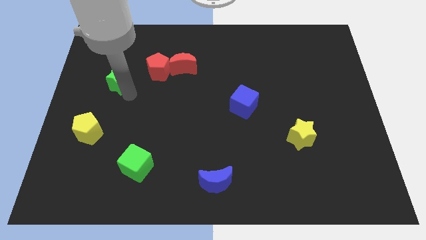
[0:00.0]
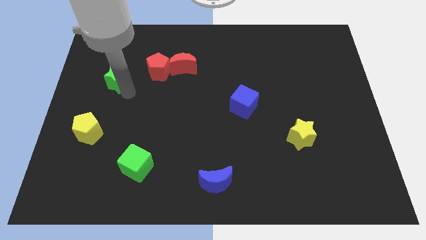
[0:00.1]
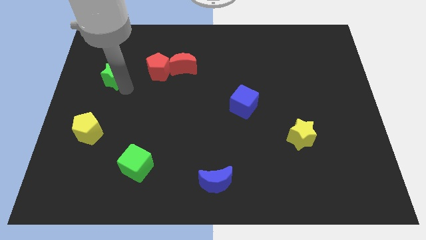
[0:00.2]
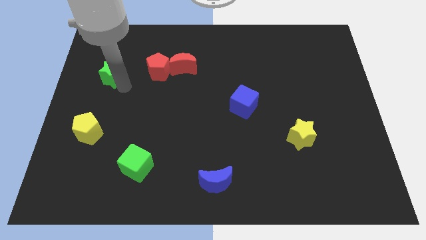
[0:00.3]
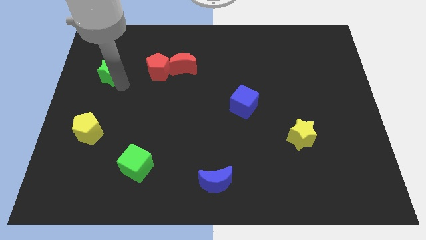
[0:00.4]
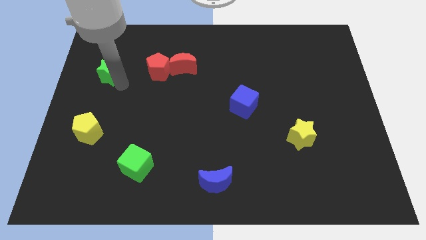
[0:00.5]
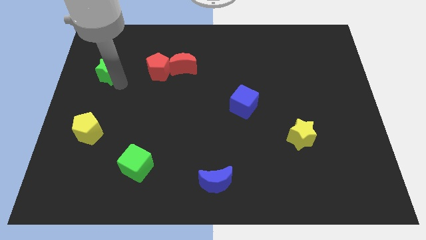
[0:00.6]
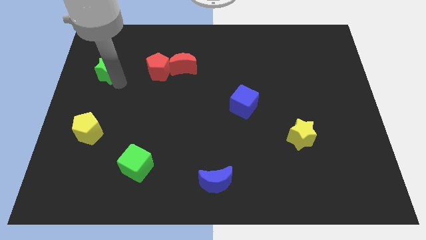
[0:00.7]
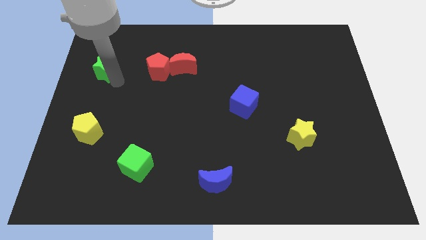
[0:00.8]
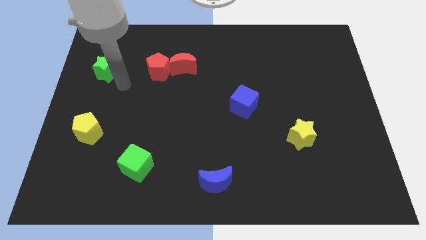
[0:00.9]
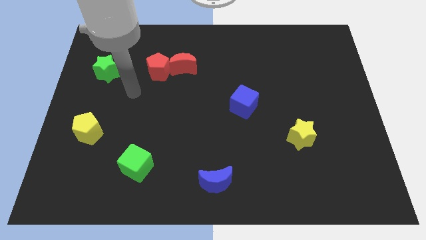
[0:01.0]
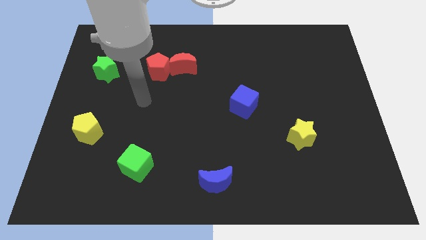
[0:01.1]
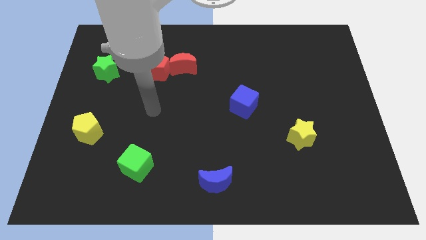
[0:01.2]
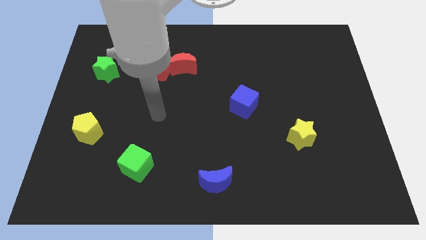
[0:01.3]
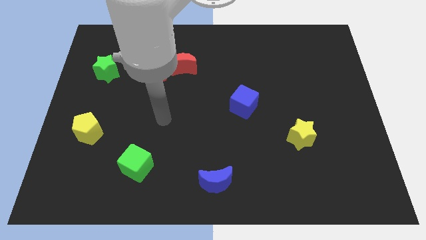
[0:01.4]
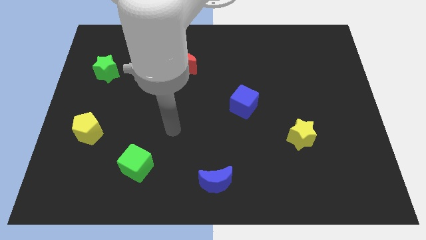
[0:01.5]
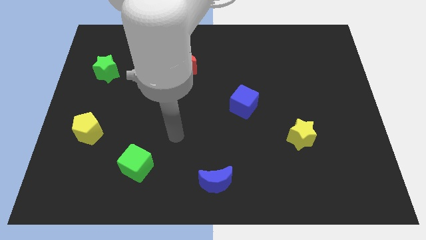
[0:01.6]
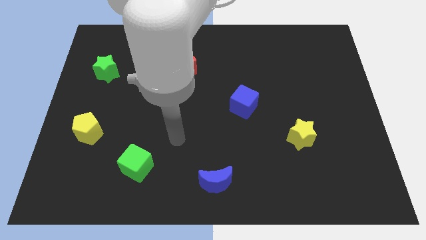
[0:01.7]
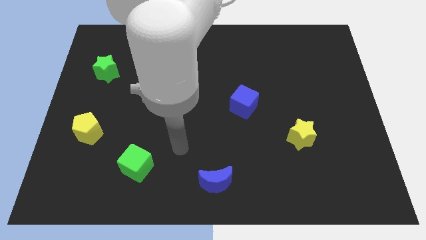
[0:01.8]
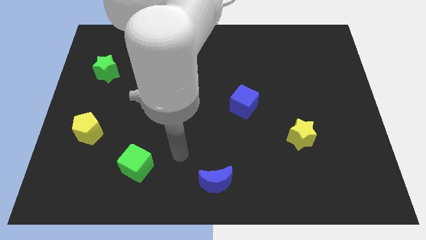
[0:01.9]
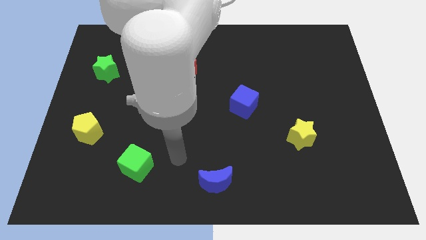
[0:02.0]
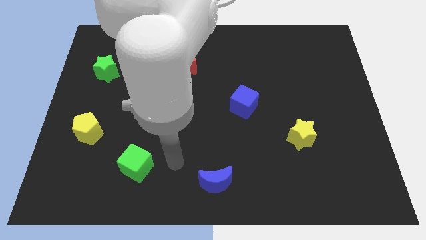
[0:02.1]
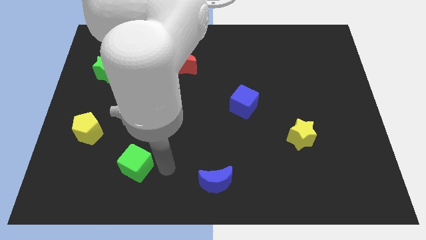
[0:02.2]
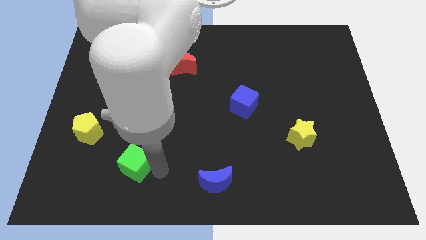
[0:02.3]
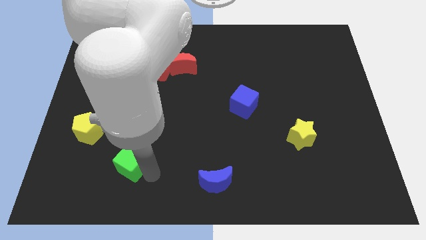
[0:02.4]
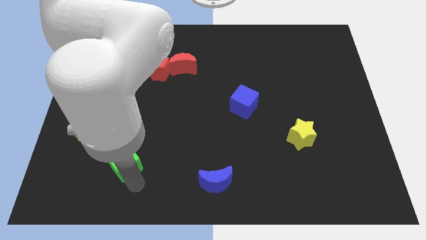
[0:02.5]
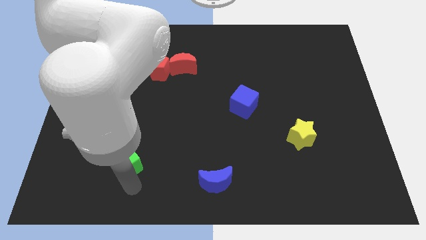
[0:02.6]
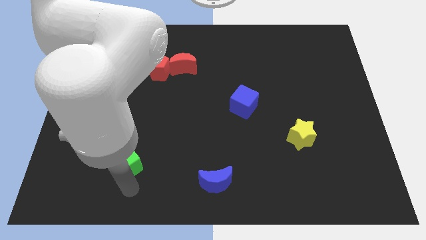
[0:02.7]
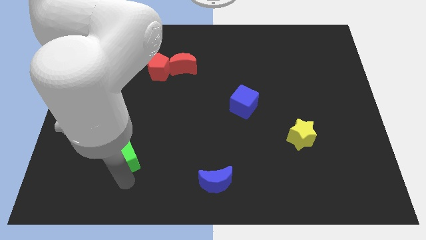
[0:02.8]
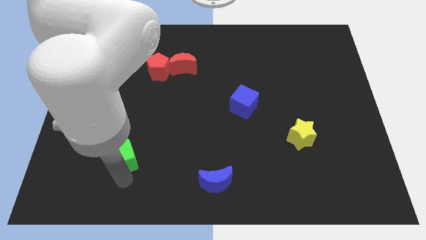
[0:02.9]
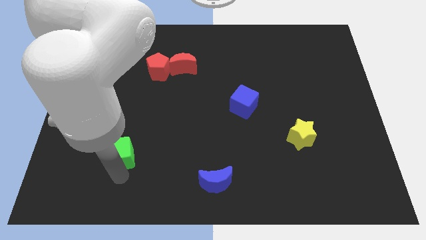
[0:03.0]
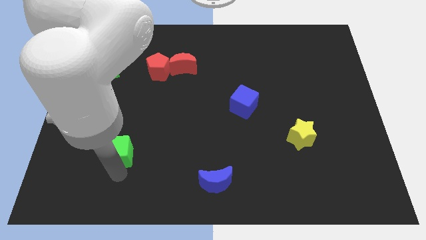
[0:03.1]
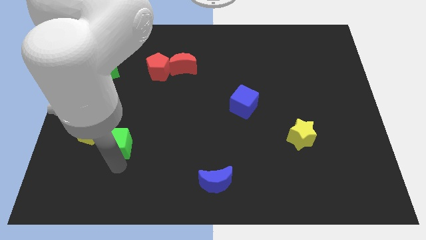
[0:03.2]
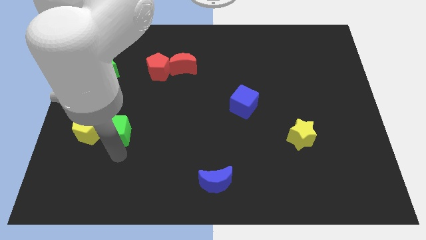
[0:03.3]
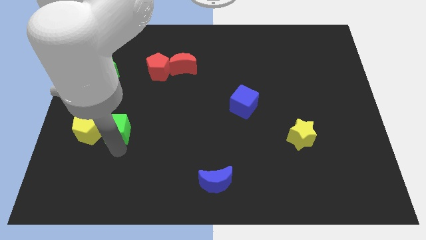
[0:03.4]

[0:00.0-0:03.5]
push the green cube to the right side of the yellow pentagon

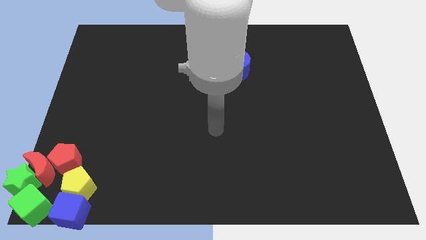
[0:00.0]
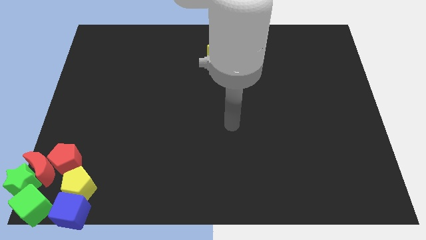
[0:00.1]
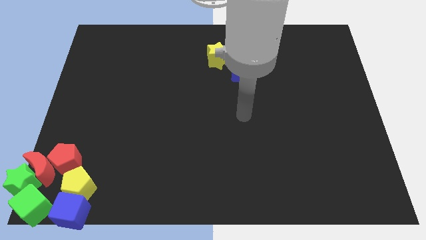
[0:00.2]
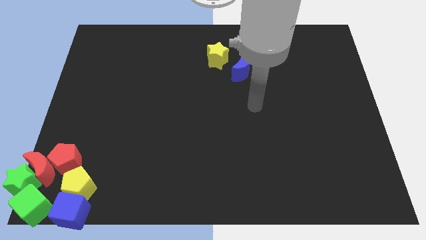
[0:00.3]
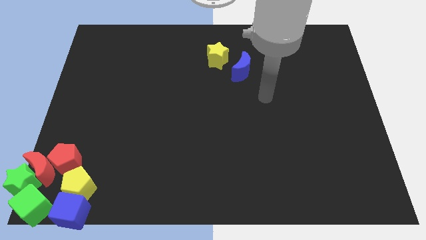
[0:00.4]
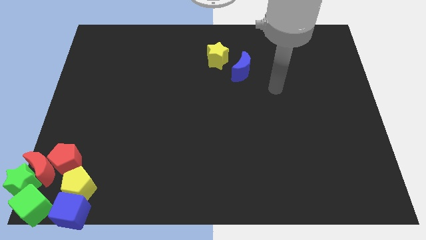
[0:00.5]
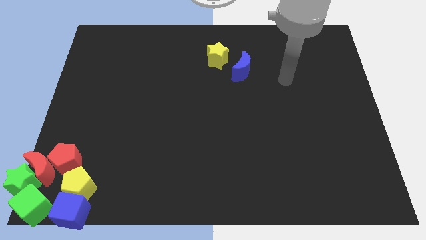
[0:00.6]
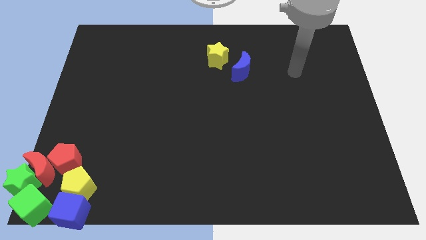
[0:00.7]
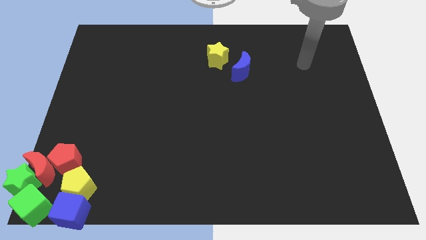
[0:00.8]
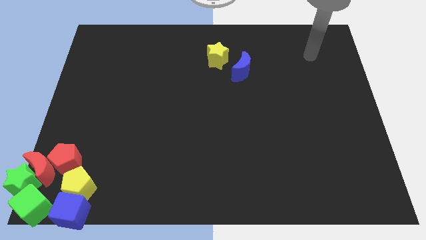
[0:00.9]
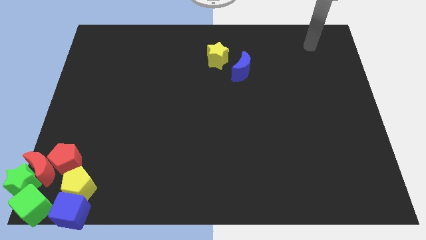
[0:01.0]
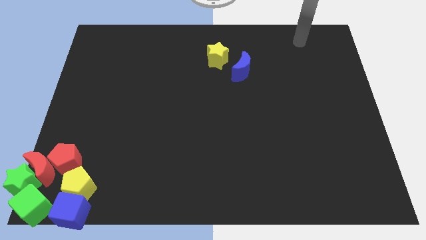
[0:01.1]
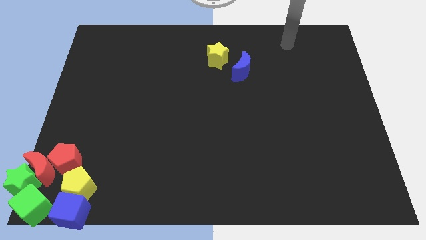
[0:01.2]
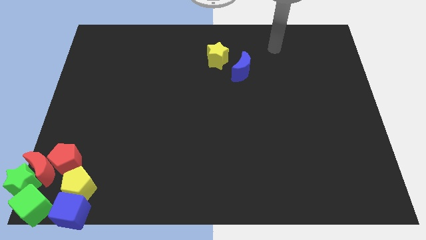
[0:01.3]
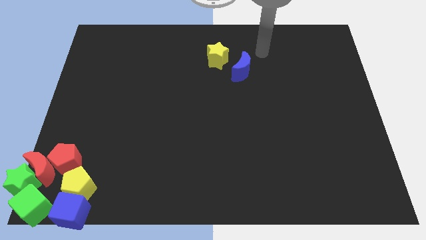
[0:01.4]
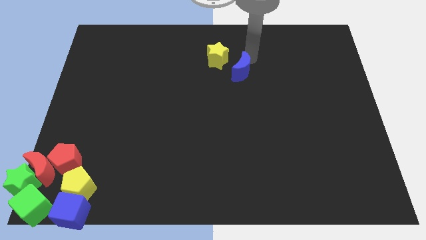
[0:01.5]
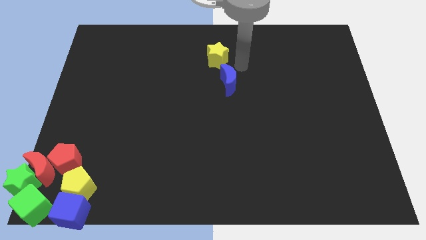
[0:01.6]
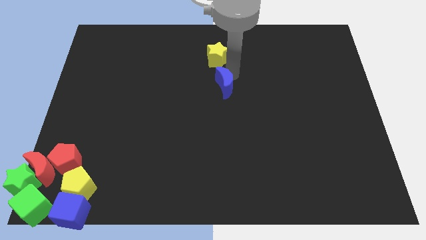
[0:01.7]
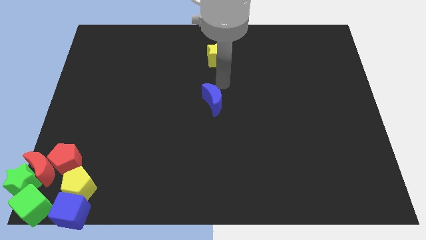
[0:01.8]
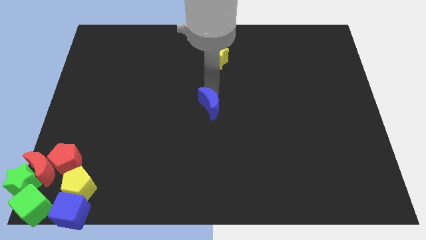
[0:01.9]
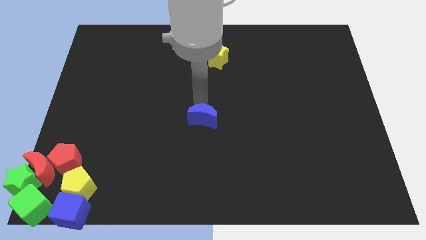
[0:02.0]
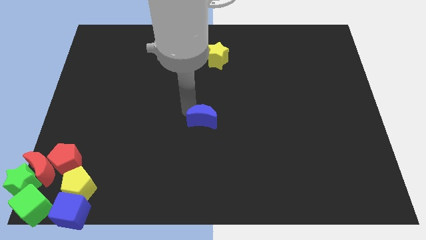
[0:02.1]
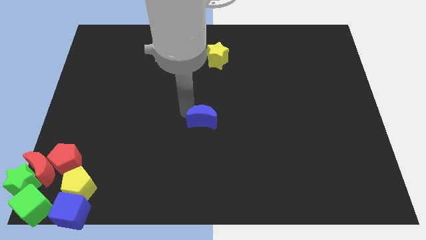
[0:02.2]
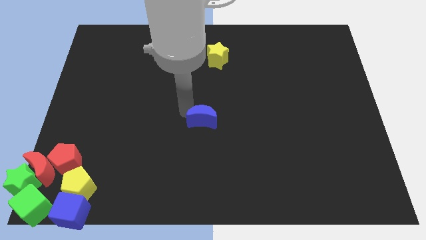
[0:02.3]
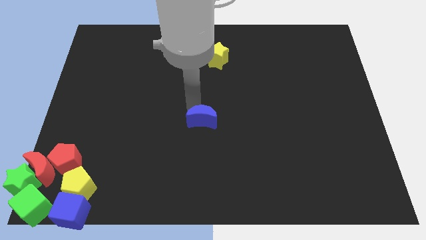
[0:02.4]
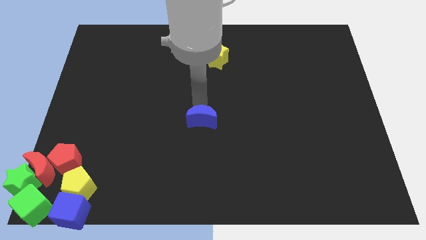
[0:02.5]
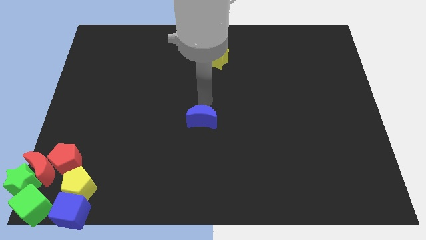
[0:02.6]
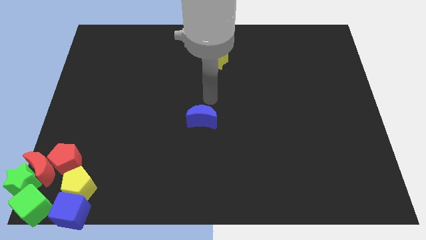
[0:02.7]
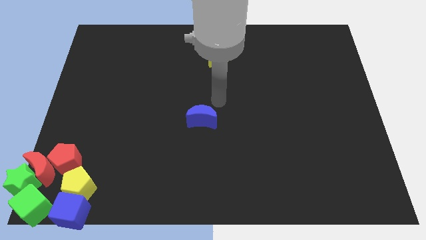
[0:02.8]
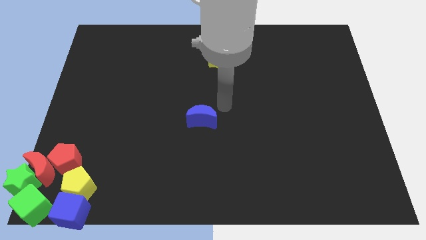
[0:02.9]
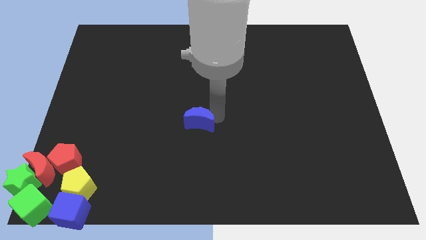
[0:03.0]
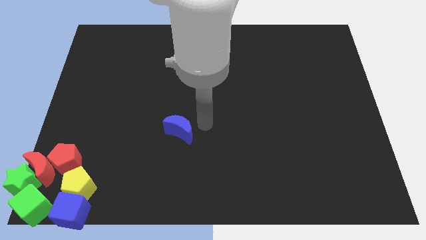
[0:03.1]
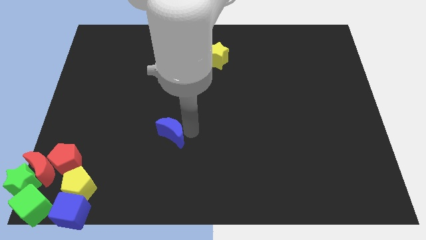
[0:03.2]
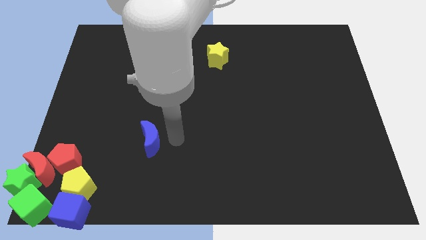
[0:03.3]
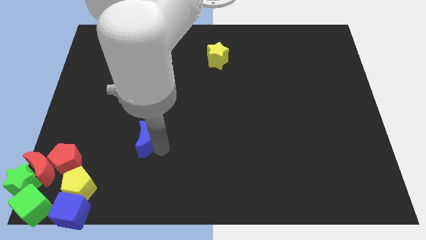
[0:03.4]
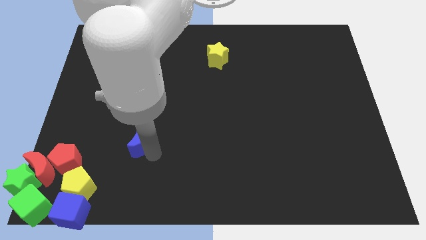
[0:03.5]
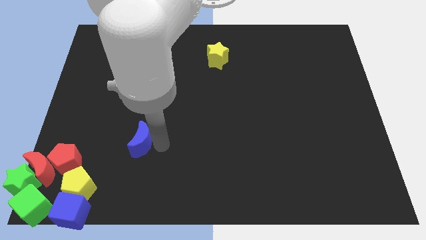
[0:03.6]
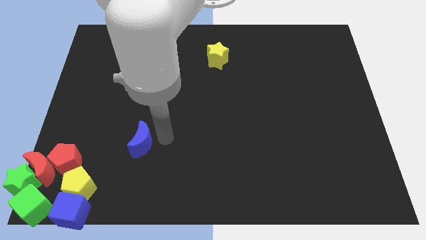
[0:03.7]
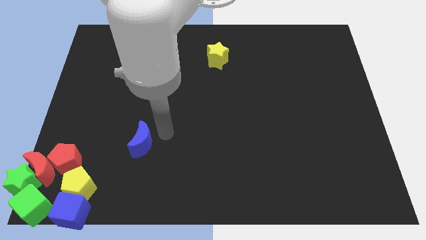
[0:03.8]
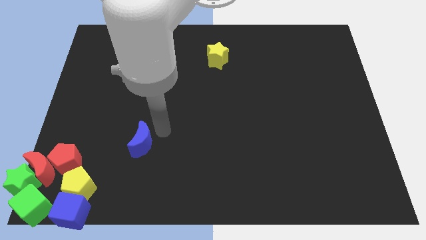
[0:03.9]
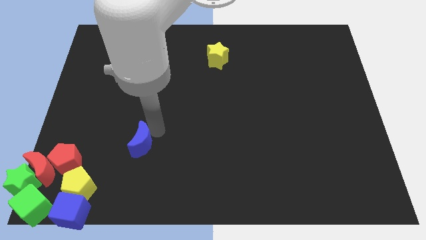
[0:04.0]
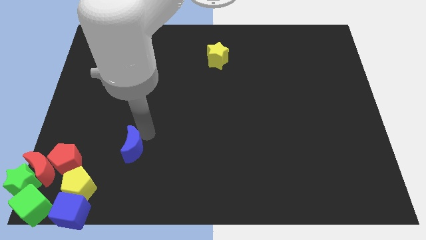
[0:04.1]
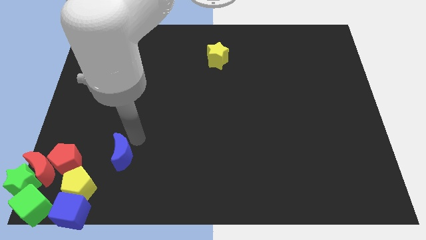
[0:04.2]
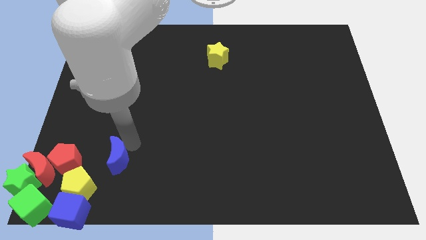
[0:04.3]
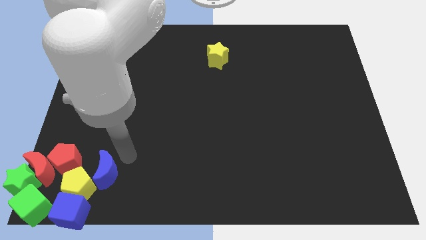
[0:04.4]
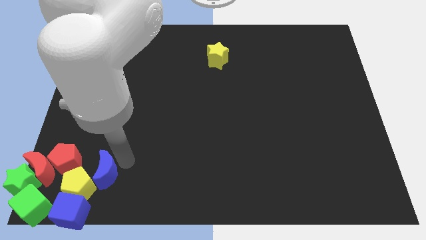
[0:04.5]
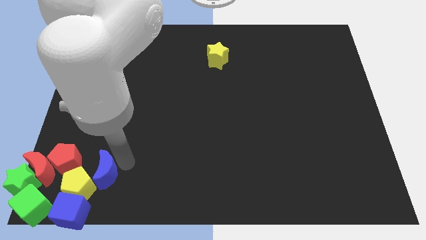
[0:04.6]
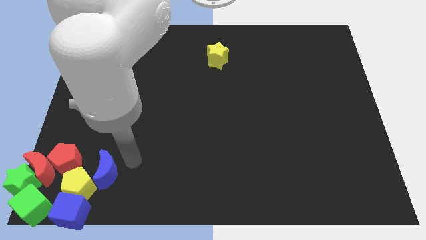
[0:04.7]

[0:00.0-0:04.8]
place the blue crescent towards the top right side of the yellow pentagon

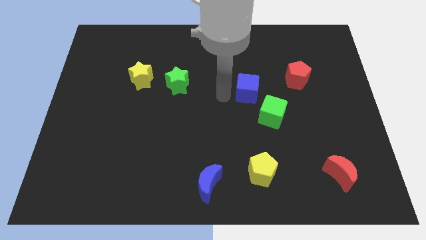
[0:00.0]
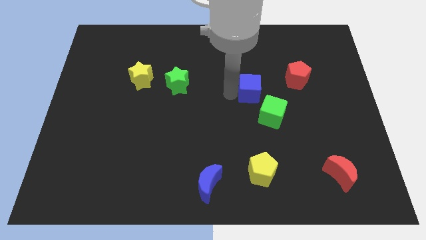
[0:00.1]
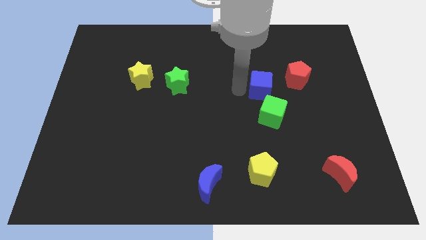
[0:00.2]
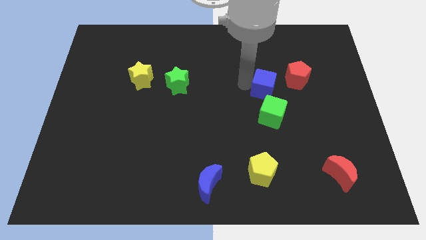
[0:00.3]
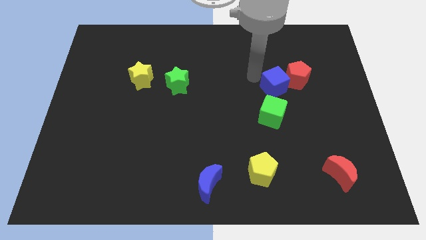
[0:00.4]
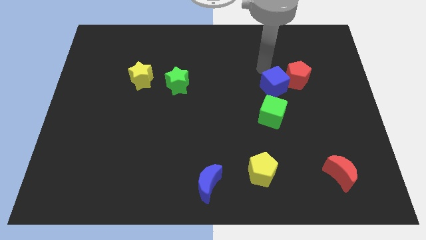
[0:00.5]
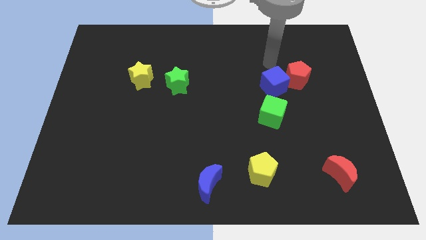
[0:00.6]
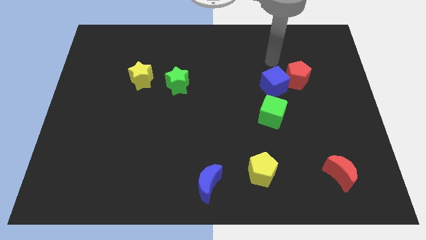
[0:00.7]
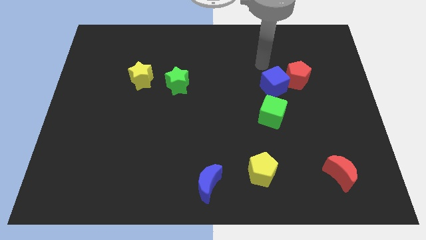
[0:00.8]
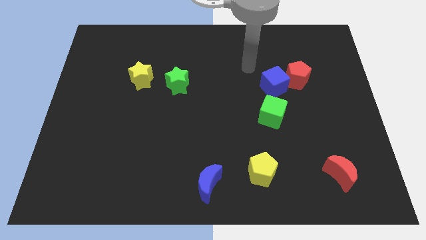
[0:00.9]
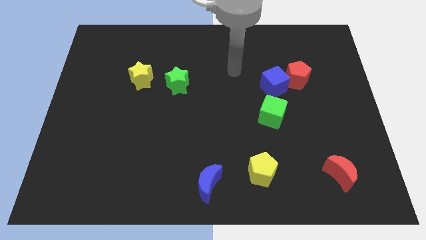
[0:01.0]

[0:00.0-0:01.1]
place blue cube to the left of red pentagon
